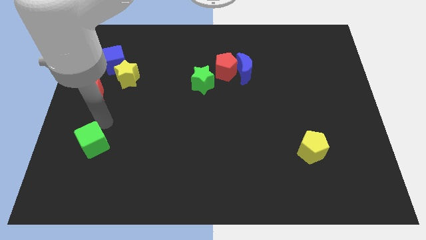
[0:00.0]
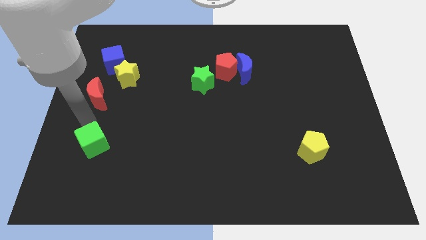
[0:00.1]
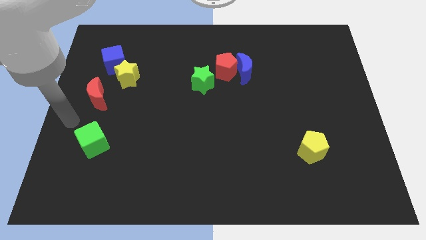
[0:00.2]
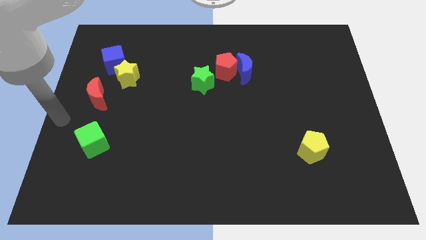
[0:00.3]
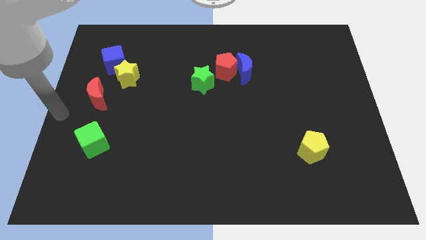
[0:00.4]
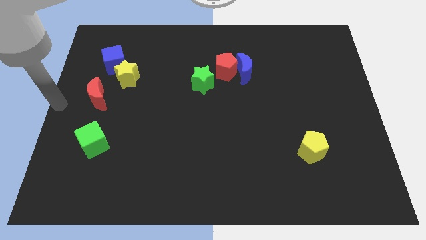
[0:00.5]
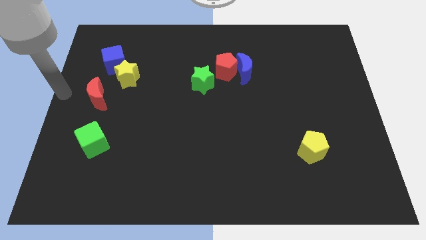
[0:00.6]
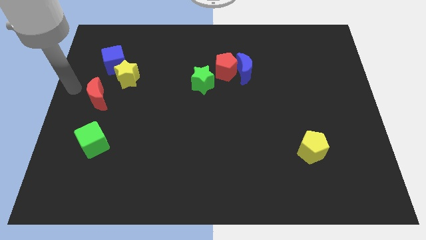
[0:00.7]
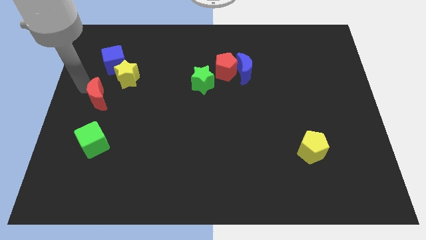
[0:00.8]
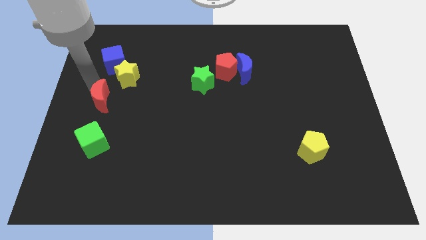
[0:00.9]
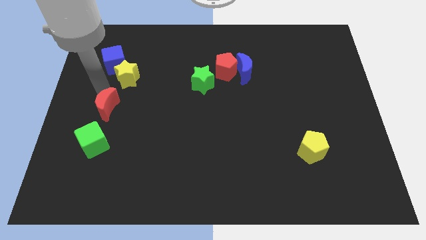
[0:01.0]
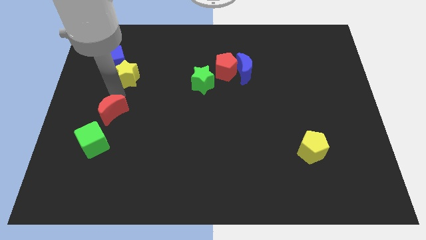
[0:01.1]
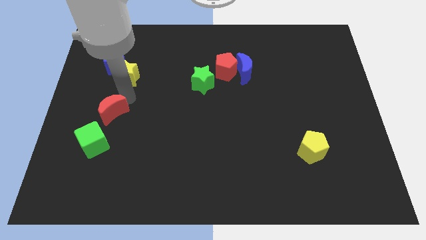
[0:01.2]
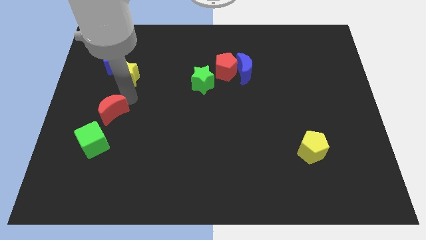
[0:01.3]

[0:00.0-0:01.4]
move the red moon in between green star and yellow star

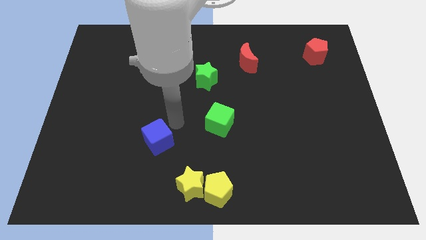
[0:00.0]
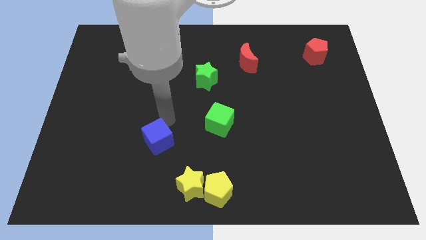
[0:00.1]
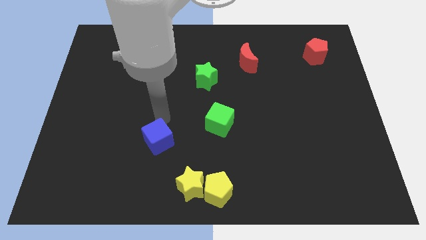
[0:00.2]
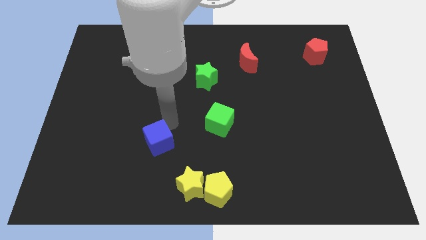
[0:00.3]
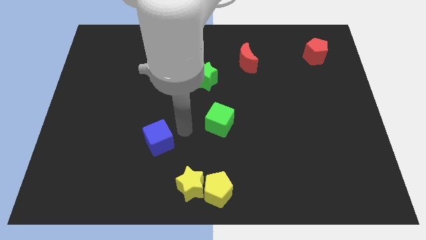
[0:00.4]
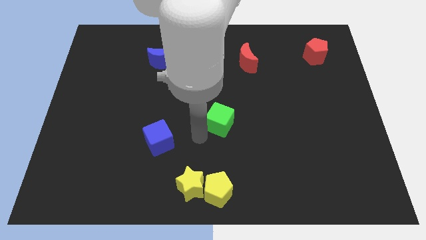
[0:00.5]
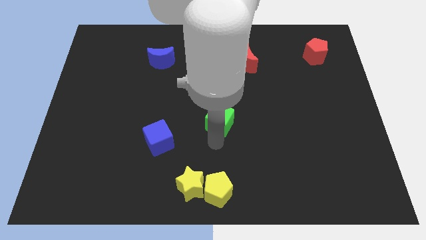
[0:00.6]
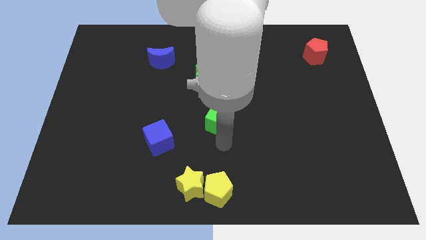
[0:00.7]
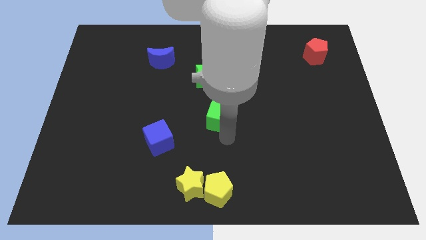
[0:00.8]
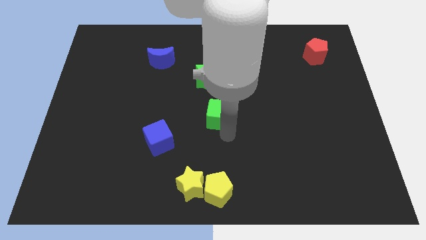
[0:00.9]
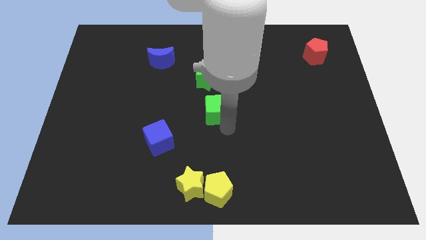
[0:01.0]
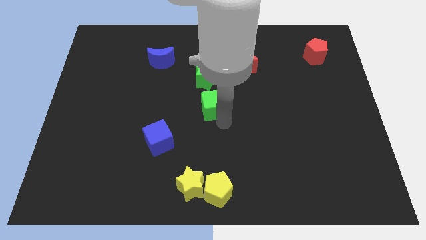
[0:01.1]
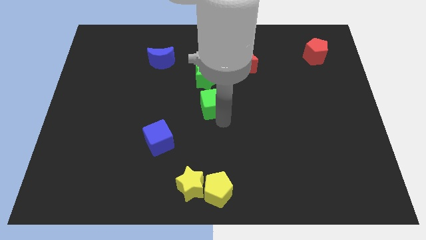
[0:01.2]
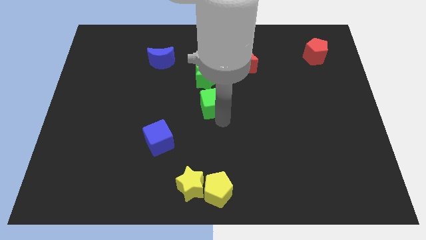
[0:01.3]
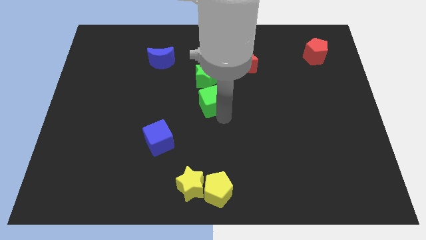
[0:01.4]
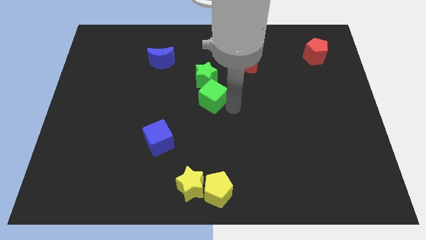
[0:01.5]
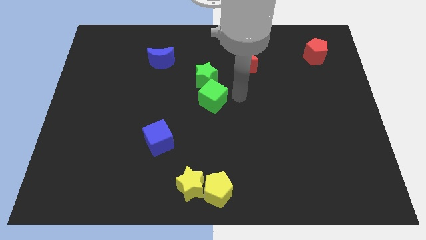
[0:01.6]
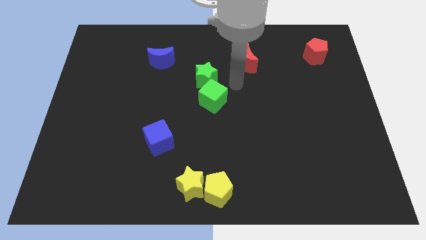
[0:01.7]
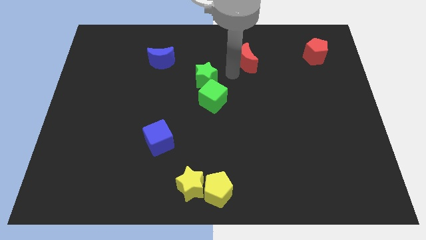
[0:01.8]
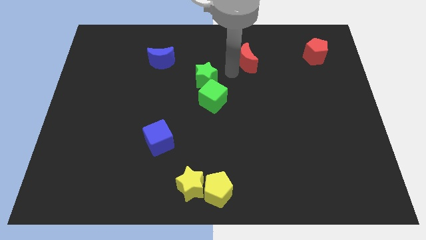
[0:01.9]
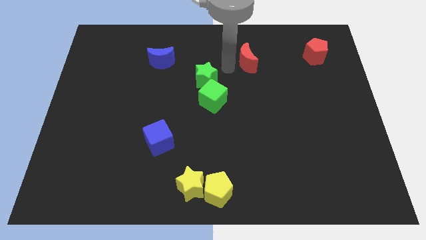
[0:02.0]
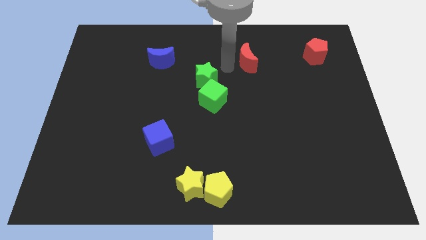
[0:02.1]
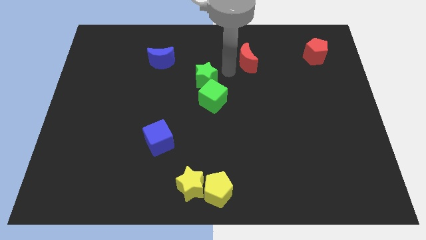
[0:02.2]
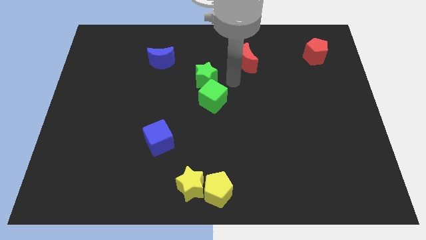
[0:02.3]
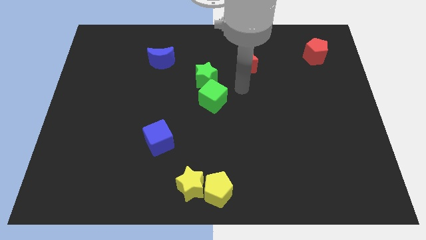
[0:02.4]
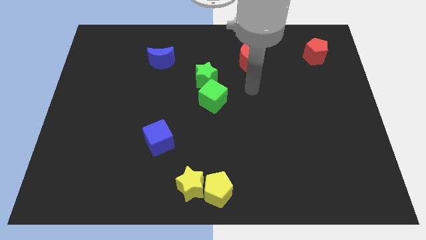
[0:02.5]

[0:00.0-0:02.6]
place the green cube at the bottom side of the green star

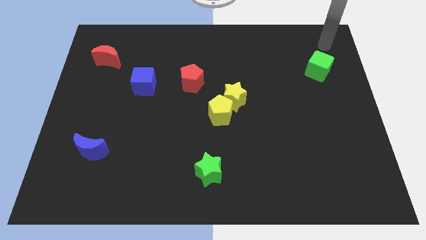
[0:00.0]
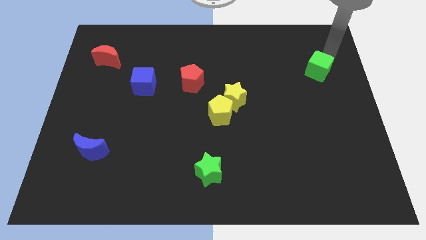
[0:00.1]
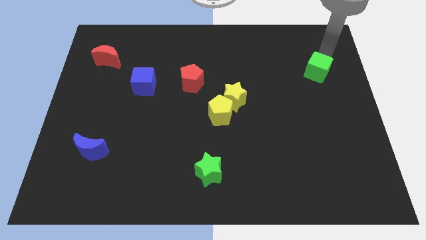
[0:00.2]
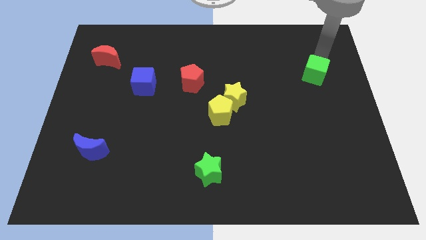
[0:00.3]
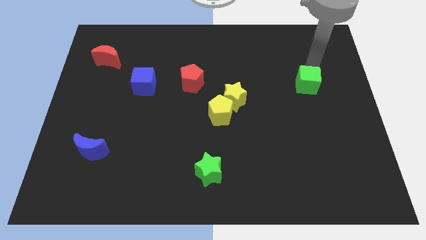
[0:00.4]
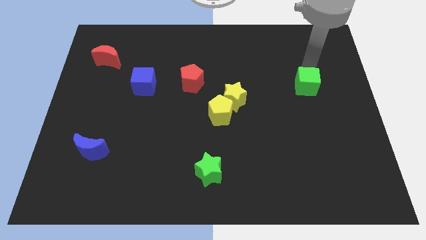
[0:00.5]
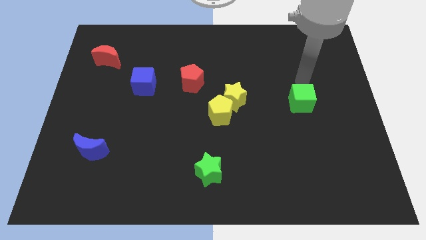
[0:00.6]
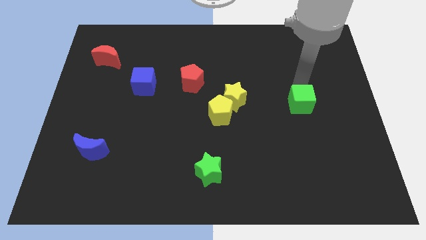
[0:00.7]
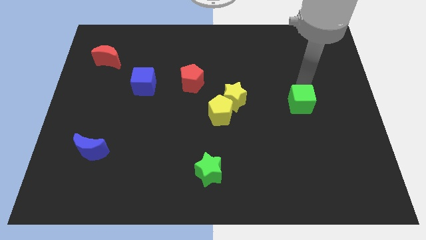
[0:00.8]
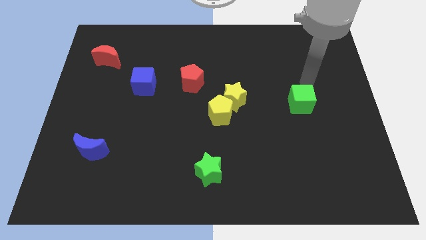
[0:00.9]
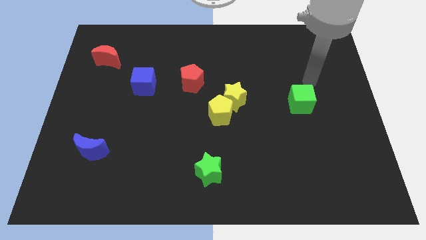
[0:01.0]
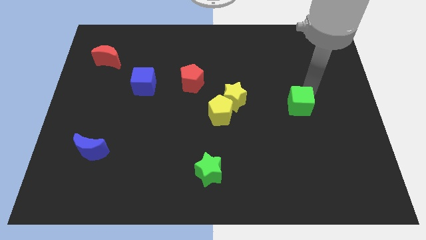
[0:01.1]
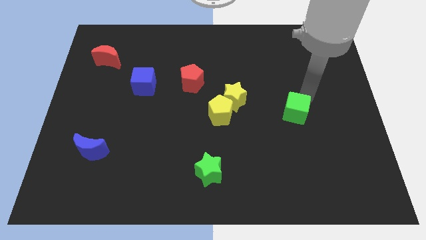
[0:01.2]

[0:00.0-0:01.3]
move green cube to center right

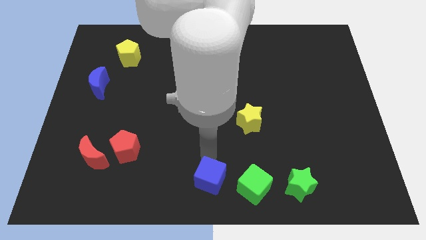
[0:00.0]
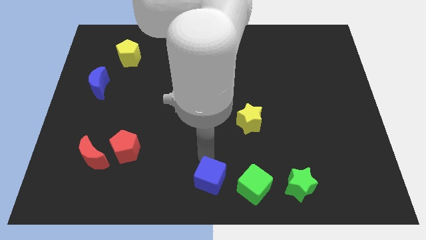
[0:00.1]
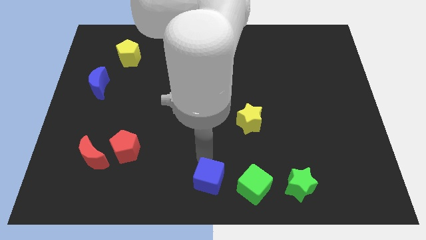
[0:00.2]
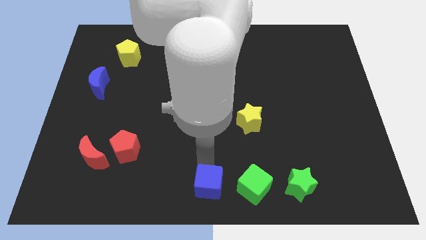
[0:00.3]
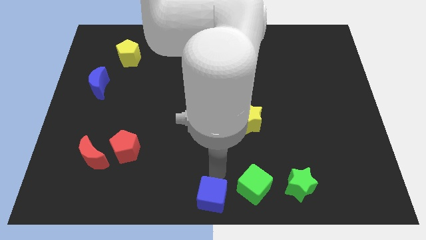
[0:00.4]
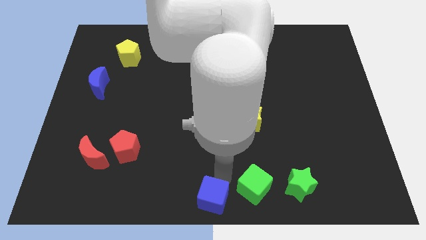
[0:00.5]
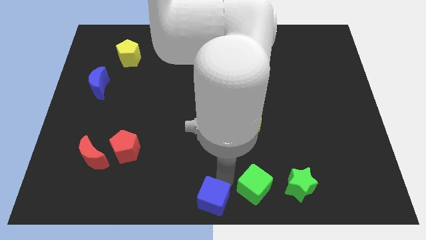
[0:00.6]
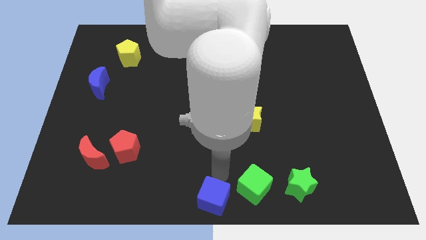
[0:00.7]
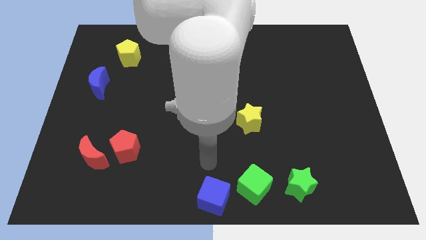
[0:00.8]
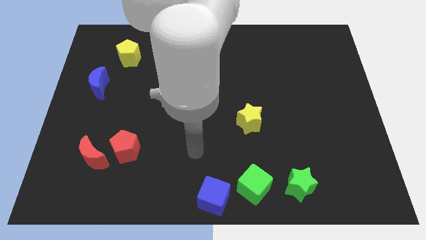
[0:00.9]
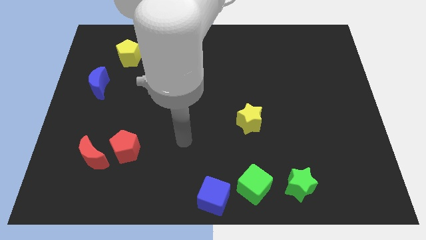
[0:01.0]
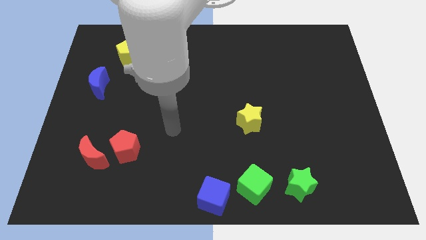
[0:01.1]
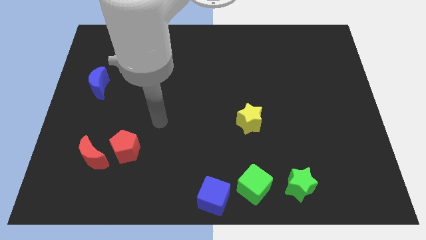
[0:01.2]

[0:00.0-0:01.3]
put the blue cube at the bottom center of the board

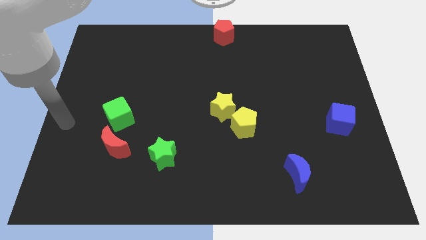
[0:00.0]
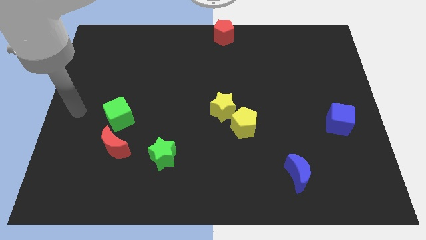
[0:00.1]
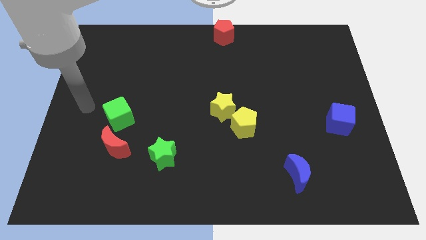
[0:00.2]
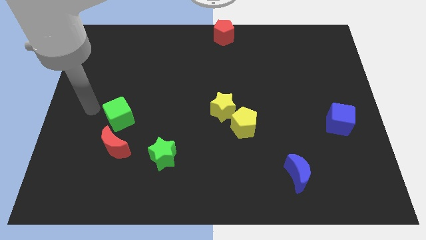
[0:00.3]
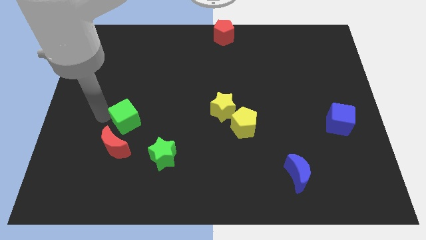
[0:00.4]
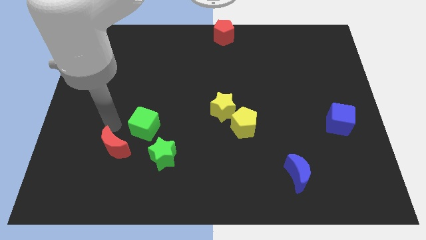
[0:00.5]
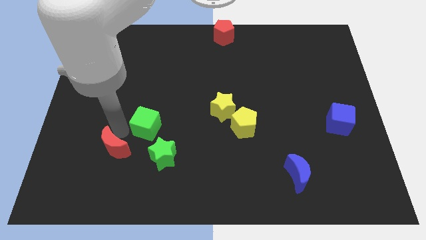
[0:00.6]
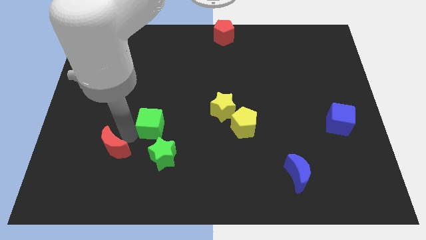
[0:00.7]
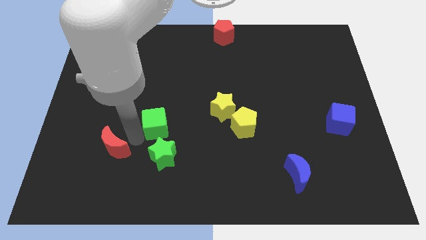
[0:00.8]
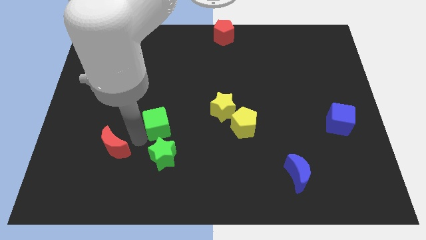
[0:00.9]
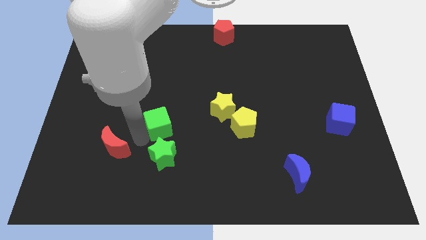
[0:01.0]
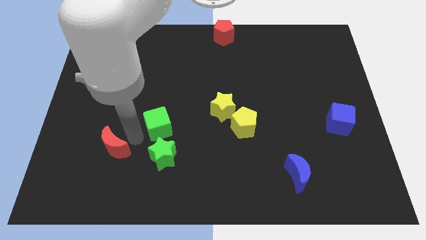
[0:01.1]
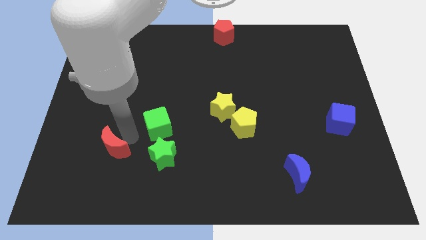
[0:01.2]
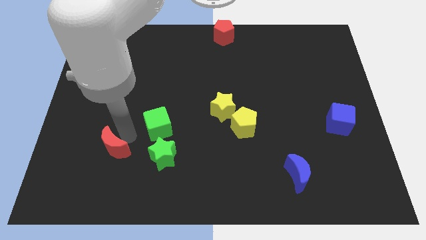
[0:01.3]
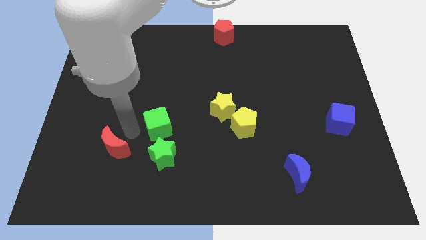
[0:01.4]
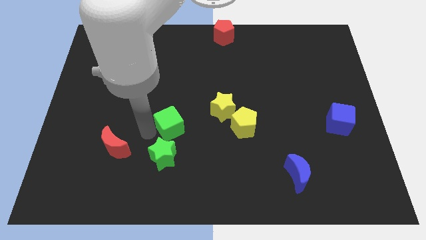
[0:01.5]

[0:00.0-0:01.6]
move the green cube to the top of the green star

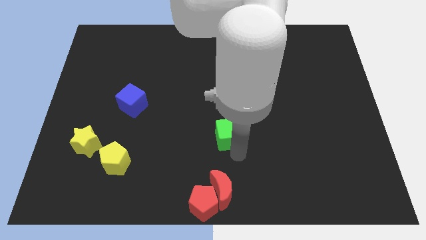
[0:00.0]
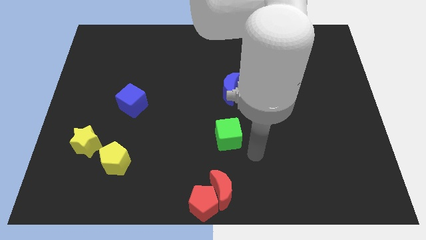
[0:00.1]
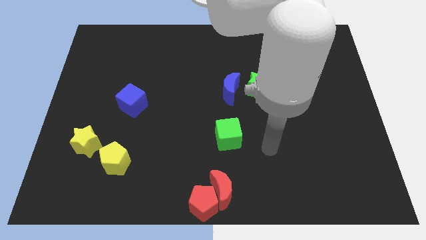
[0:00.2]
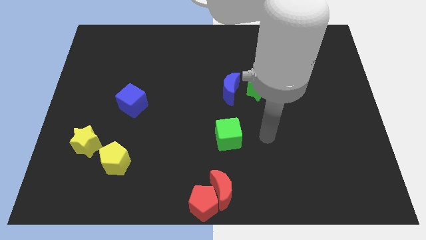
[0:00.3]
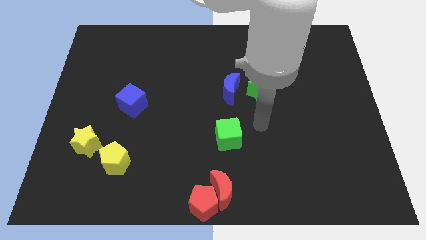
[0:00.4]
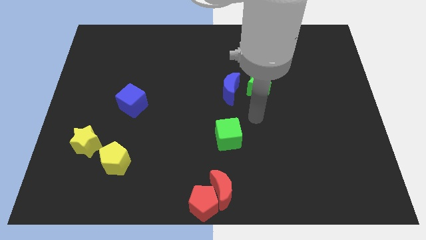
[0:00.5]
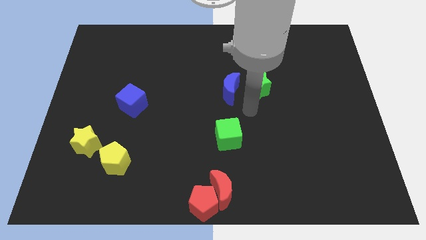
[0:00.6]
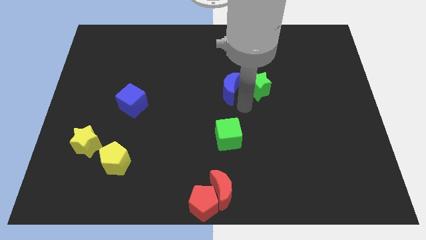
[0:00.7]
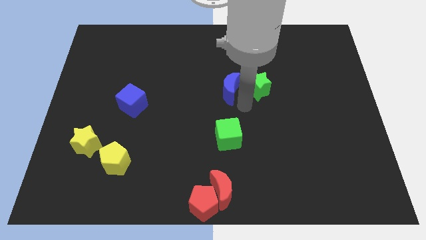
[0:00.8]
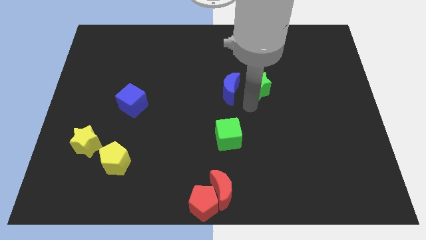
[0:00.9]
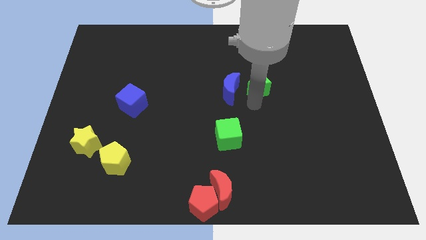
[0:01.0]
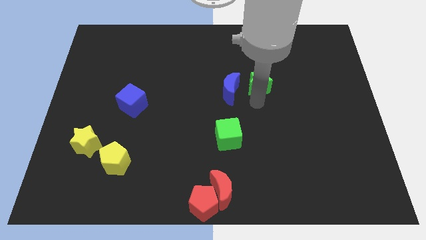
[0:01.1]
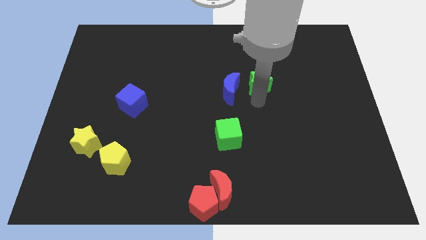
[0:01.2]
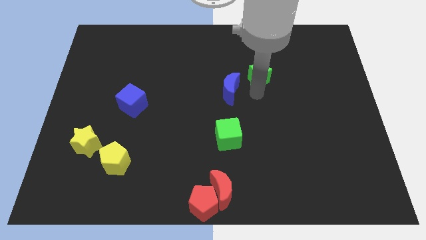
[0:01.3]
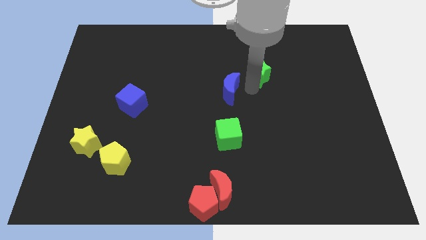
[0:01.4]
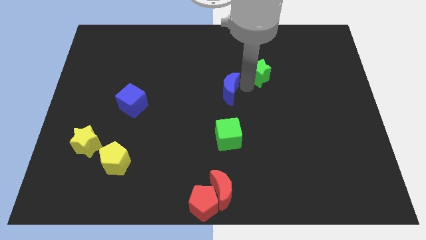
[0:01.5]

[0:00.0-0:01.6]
push green star towards top
